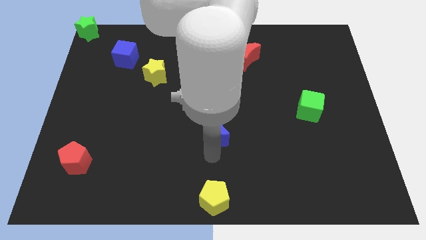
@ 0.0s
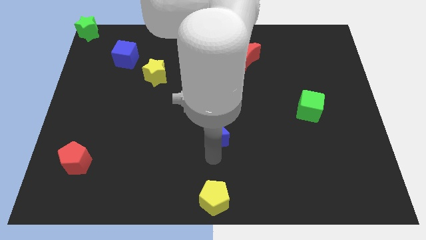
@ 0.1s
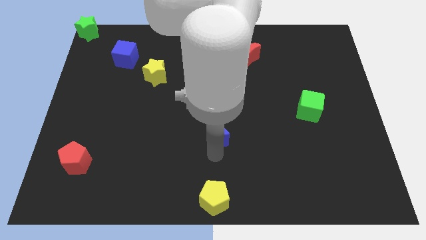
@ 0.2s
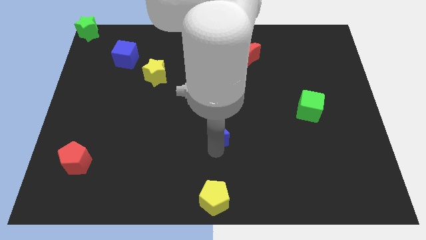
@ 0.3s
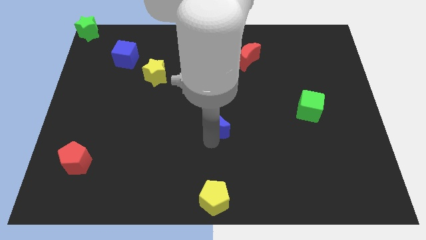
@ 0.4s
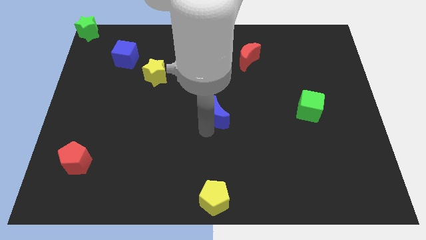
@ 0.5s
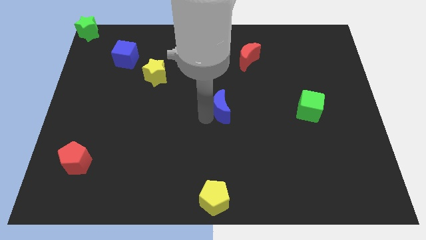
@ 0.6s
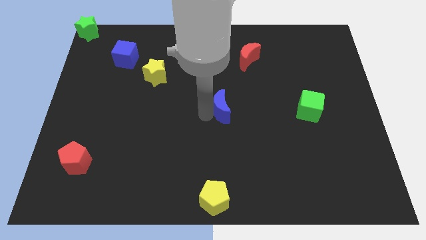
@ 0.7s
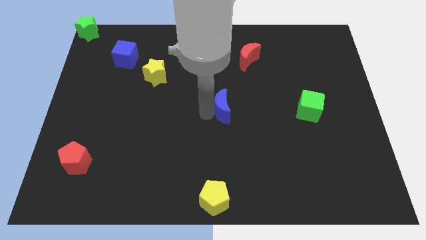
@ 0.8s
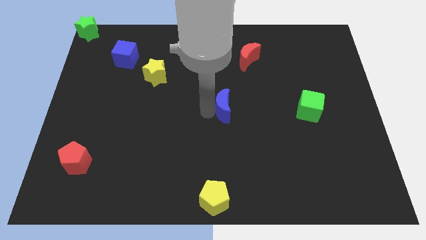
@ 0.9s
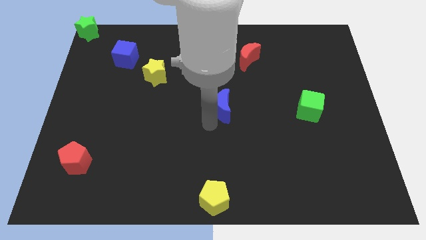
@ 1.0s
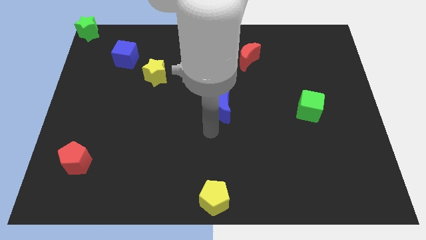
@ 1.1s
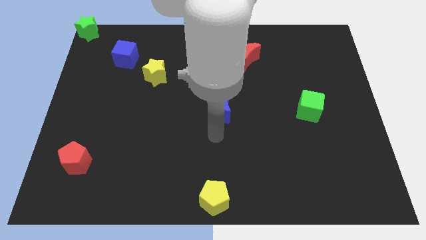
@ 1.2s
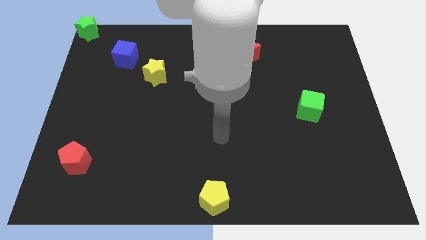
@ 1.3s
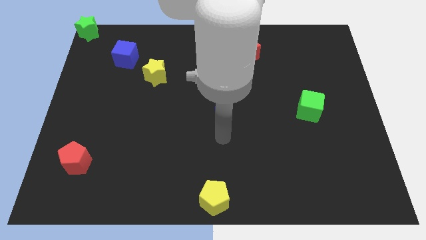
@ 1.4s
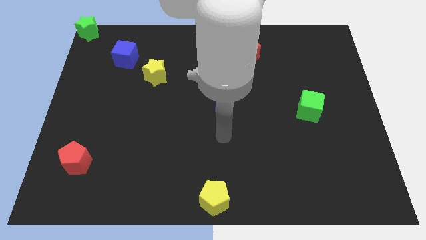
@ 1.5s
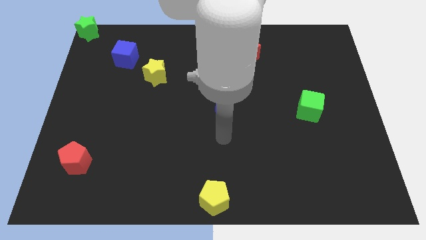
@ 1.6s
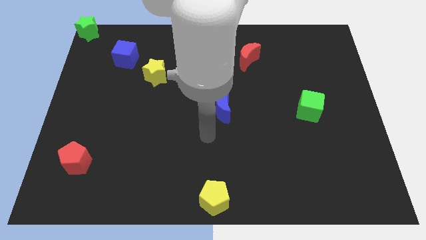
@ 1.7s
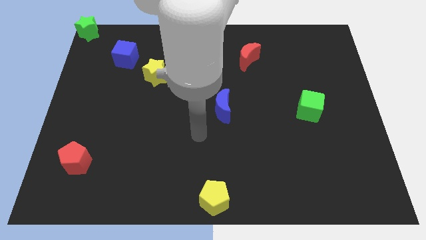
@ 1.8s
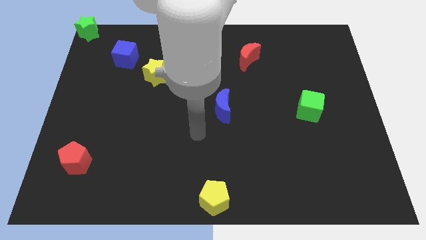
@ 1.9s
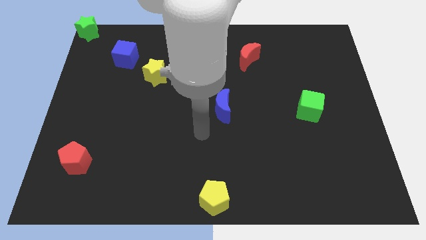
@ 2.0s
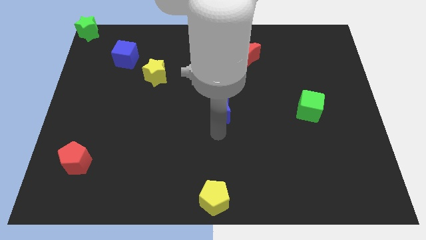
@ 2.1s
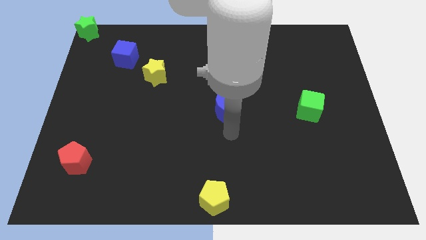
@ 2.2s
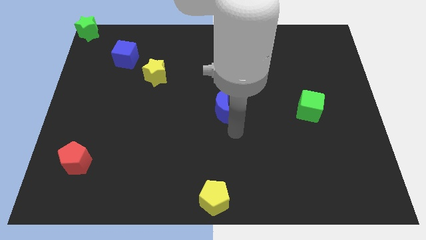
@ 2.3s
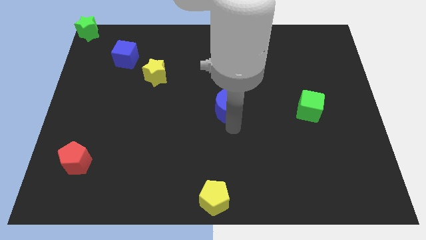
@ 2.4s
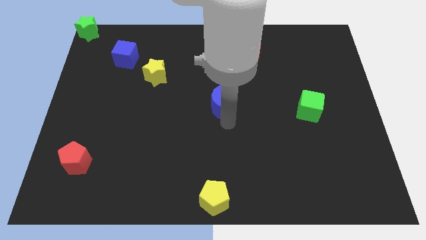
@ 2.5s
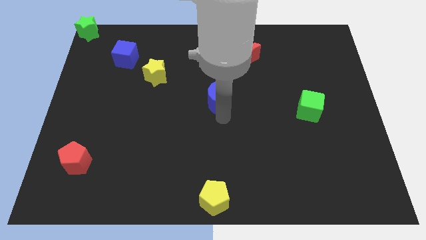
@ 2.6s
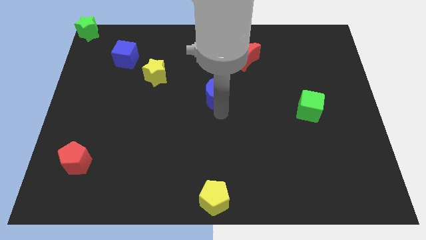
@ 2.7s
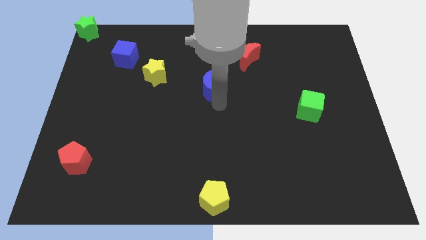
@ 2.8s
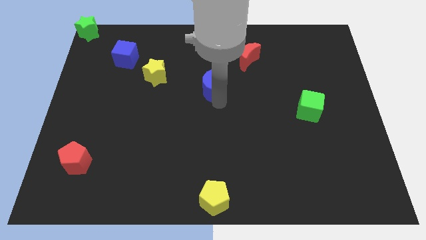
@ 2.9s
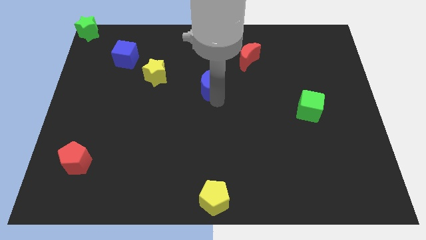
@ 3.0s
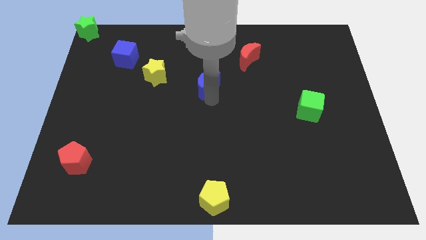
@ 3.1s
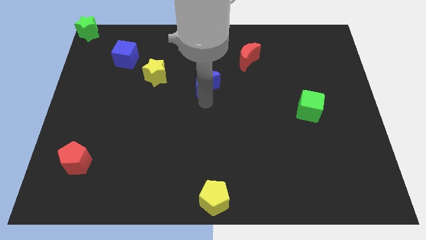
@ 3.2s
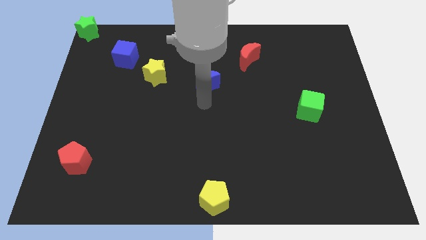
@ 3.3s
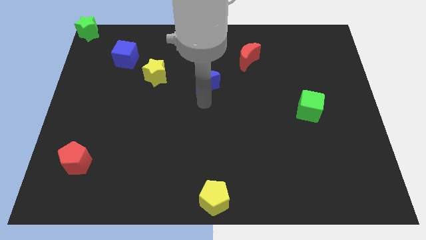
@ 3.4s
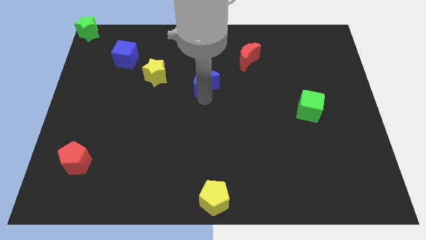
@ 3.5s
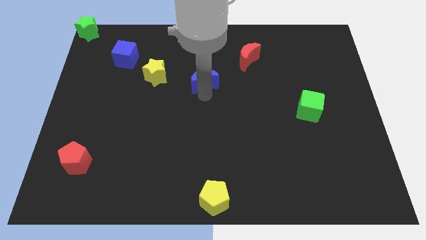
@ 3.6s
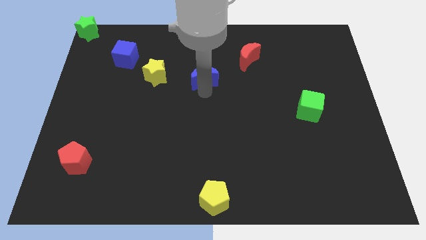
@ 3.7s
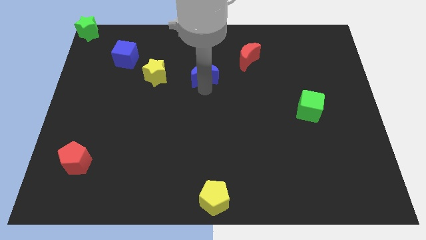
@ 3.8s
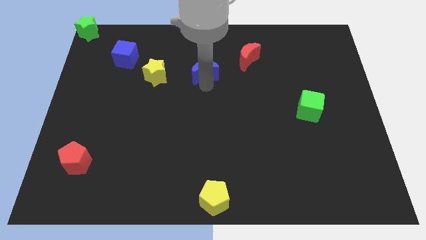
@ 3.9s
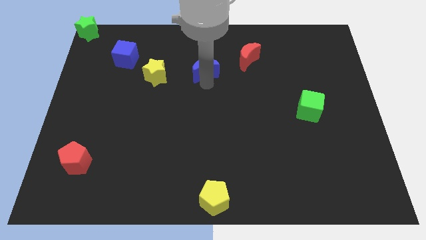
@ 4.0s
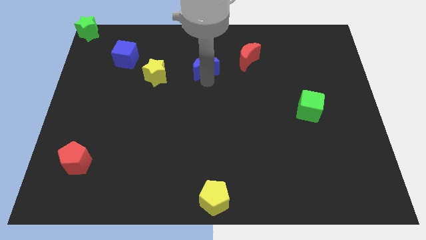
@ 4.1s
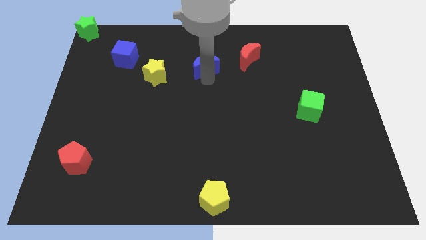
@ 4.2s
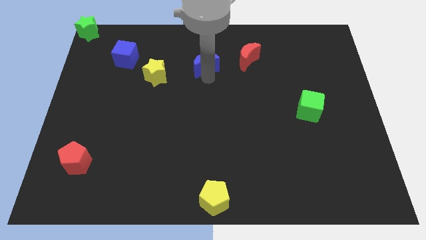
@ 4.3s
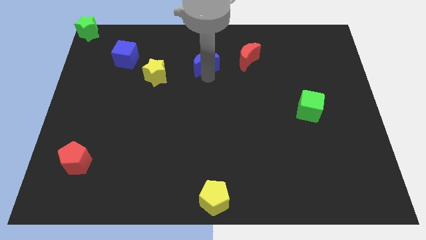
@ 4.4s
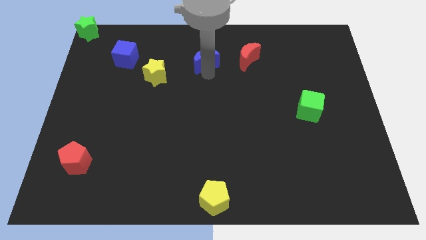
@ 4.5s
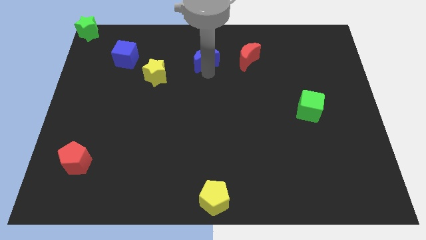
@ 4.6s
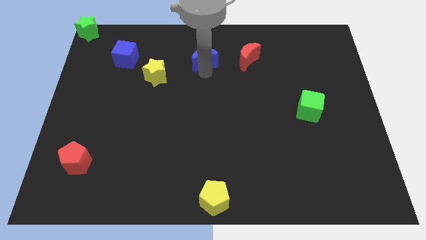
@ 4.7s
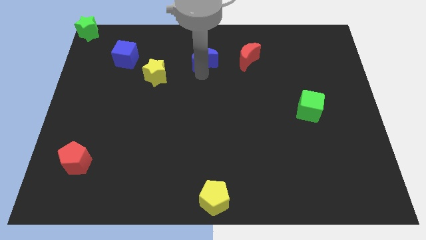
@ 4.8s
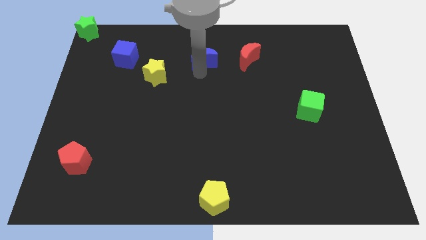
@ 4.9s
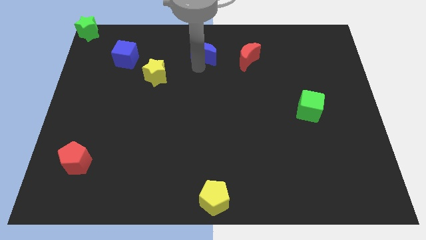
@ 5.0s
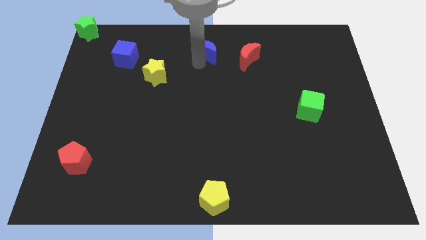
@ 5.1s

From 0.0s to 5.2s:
place the blue crescent to the left of the red crescent

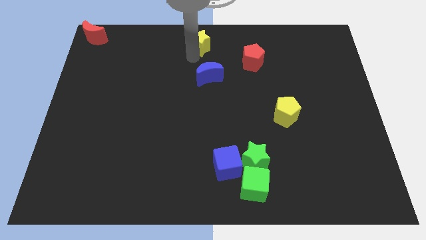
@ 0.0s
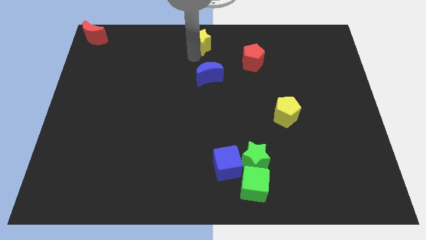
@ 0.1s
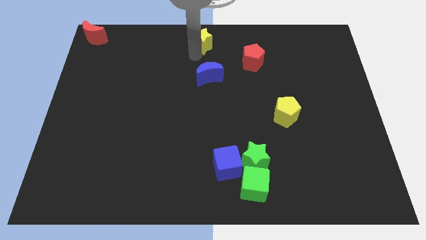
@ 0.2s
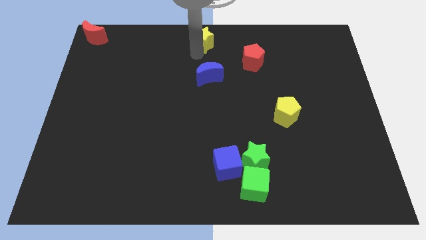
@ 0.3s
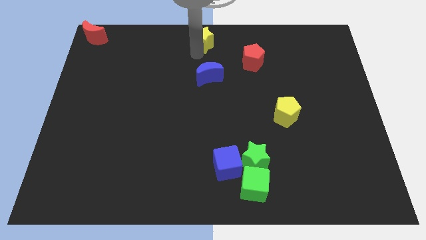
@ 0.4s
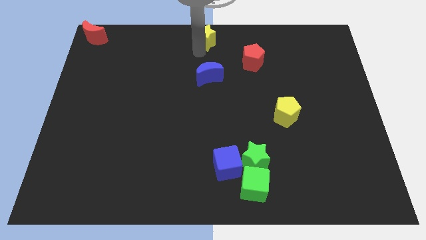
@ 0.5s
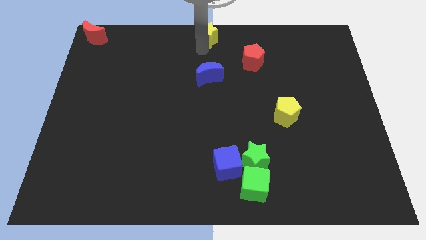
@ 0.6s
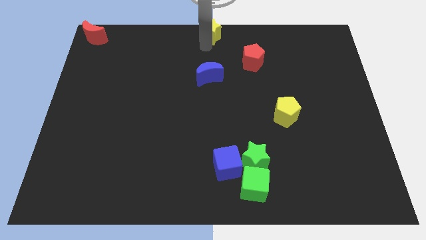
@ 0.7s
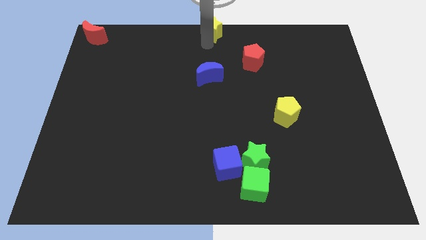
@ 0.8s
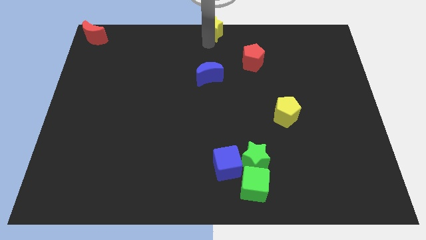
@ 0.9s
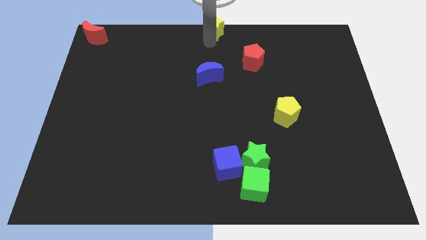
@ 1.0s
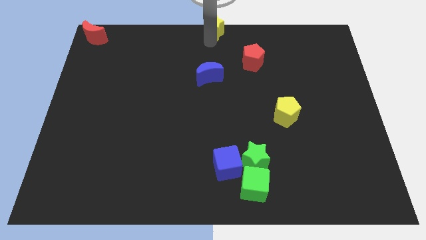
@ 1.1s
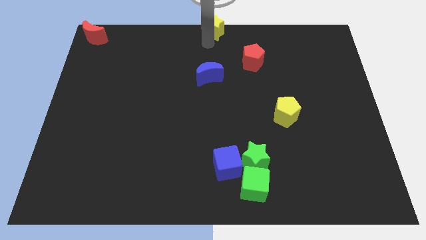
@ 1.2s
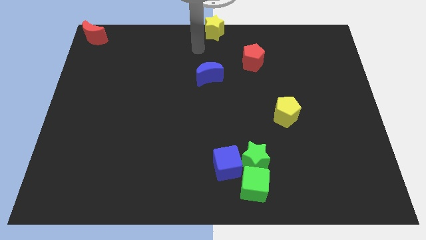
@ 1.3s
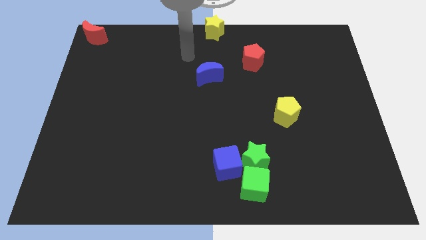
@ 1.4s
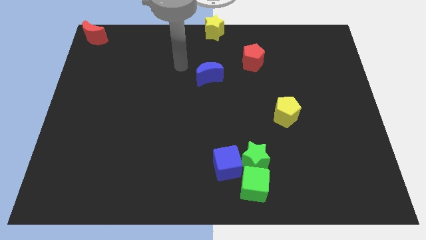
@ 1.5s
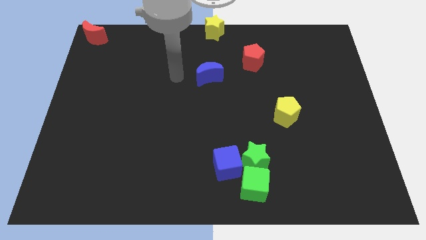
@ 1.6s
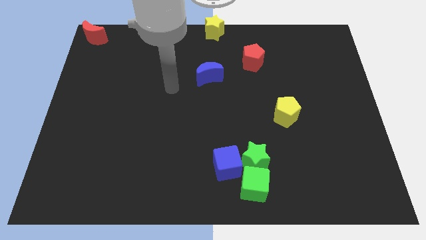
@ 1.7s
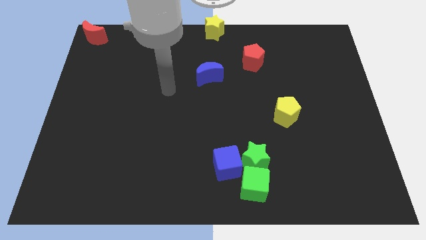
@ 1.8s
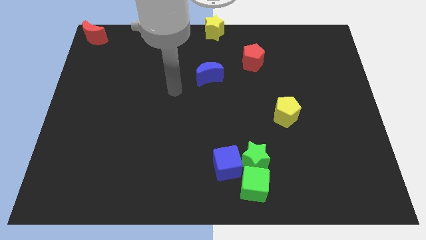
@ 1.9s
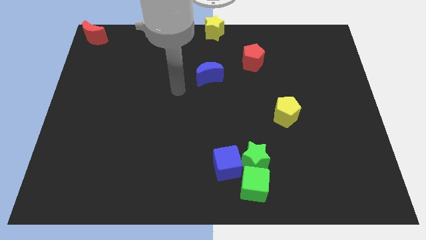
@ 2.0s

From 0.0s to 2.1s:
slide yellow star to the top center

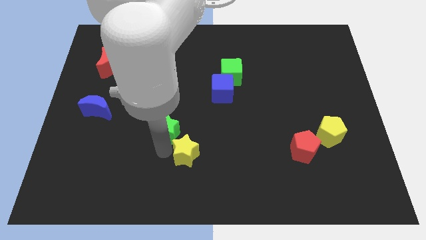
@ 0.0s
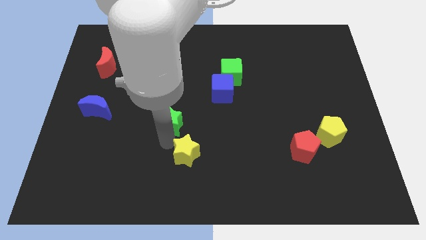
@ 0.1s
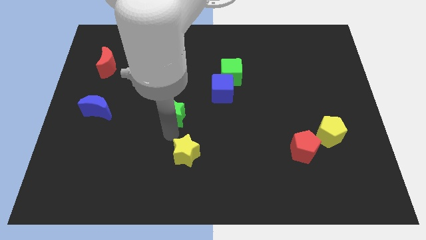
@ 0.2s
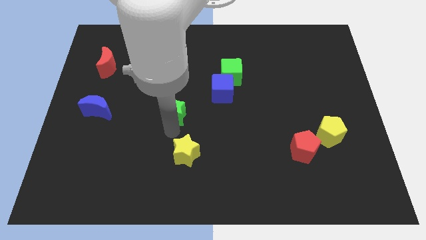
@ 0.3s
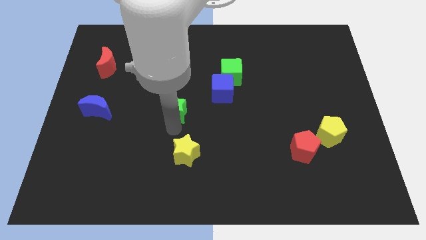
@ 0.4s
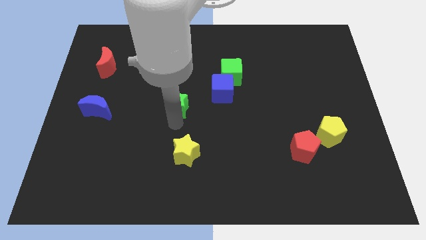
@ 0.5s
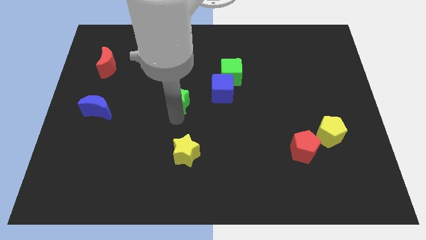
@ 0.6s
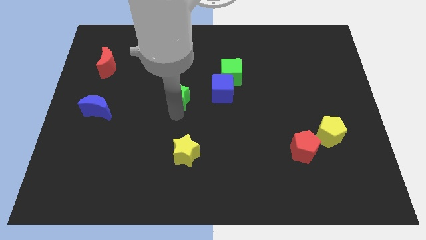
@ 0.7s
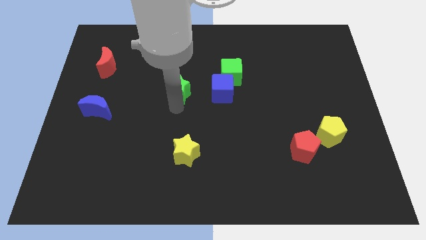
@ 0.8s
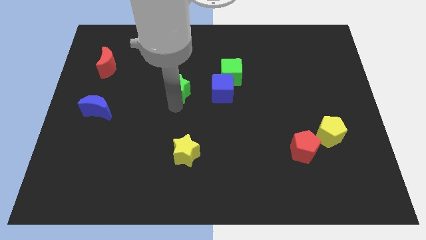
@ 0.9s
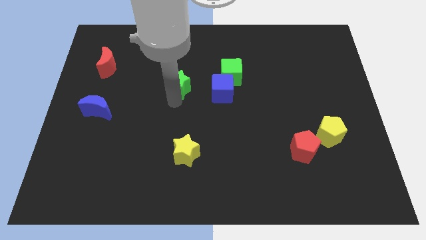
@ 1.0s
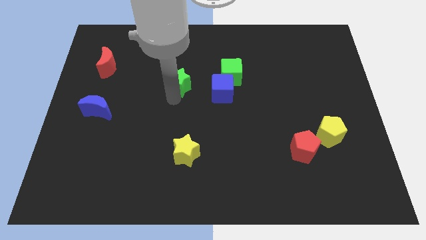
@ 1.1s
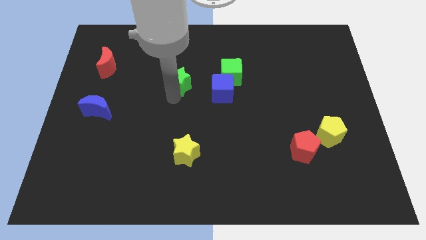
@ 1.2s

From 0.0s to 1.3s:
separate green star from yellow star

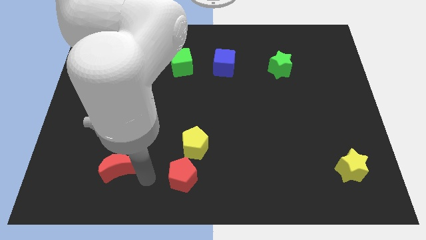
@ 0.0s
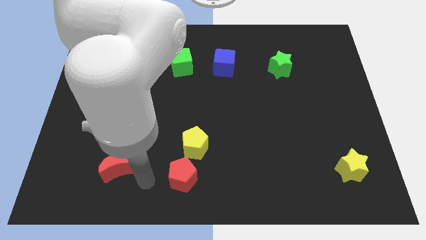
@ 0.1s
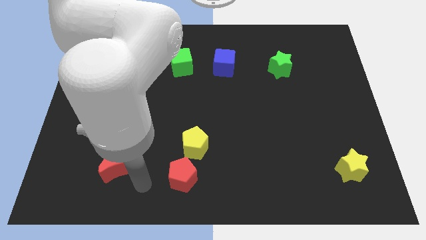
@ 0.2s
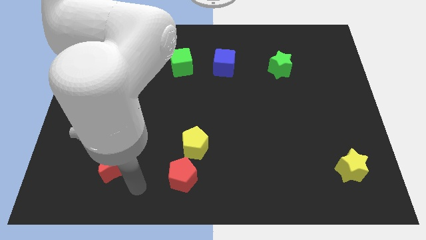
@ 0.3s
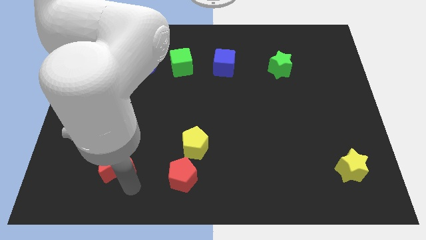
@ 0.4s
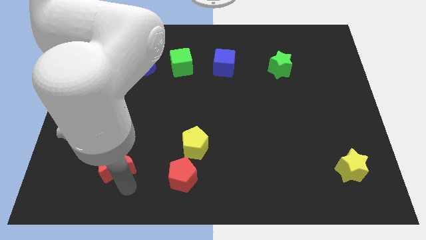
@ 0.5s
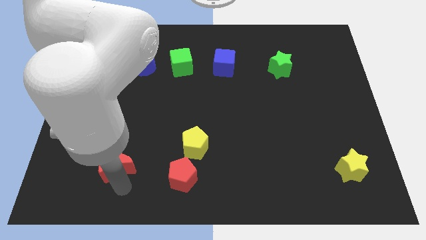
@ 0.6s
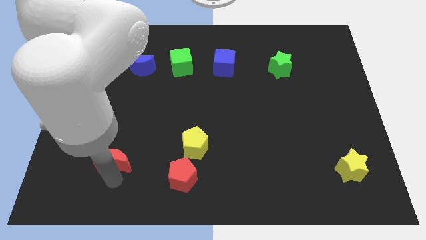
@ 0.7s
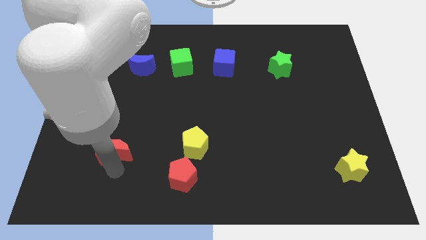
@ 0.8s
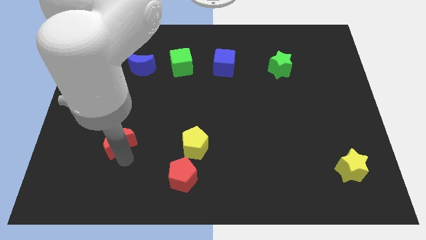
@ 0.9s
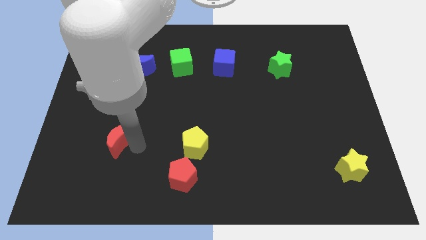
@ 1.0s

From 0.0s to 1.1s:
push red crescent slightly upward
